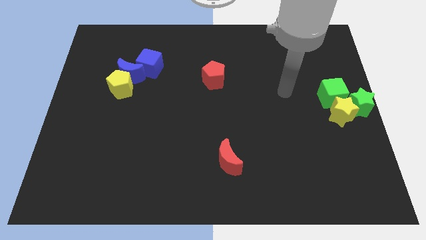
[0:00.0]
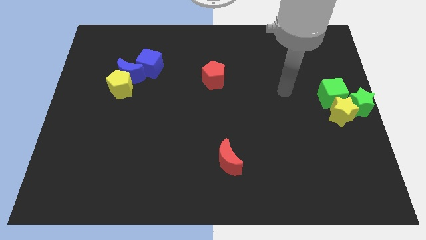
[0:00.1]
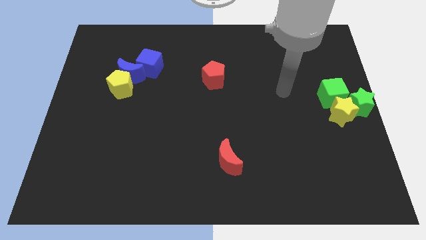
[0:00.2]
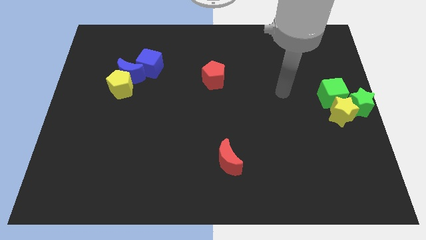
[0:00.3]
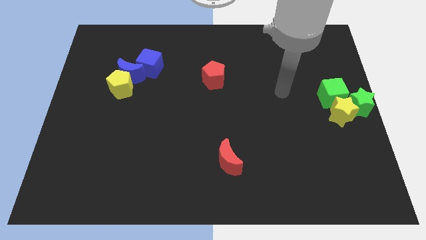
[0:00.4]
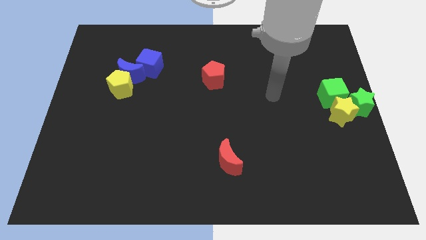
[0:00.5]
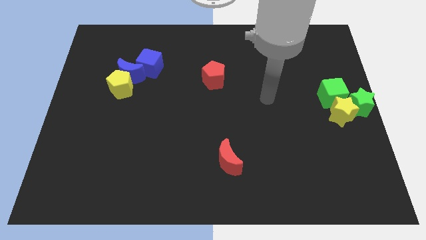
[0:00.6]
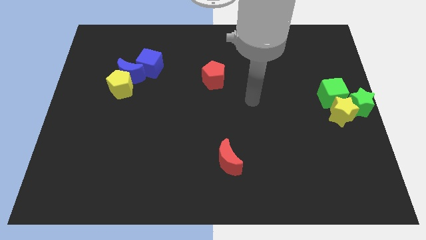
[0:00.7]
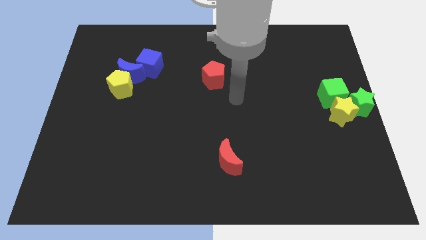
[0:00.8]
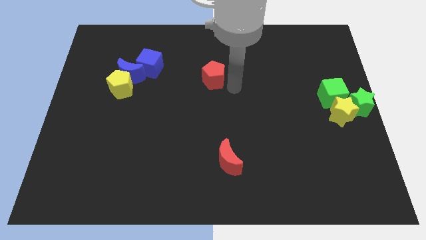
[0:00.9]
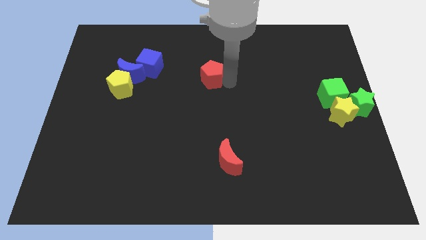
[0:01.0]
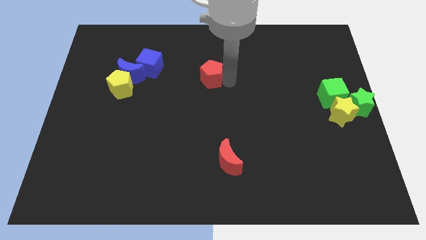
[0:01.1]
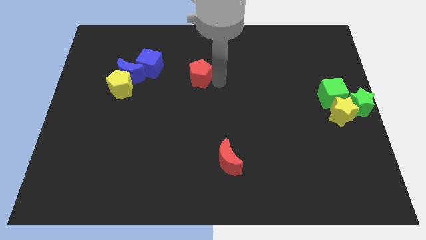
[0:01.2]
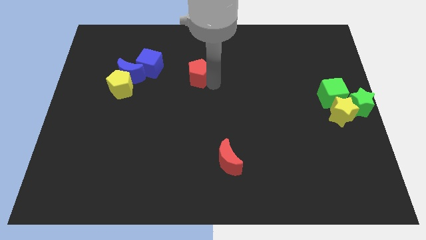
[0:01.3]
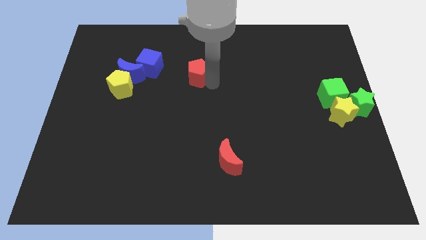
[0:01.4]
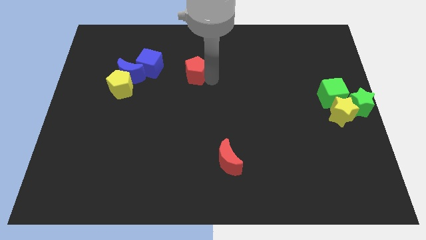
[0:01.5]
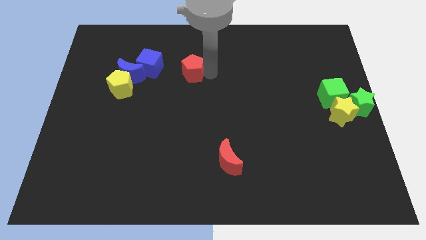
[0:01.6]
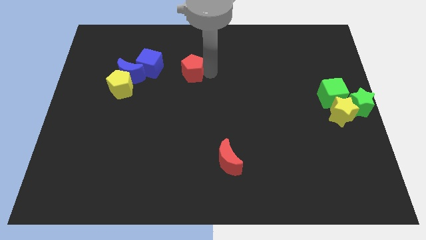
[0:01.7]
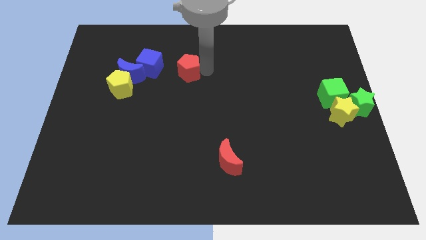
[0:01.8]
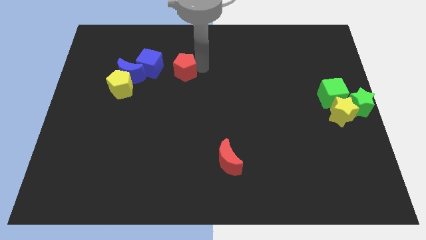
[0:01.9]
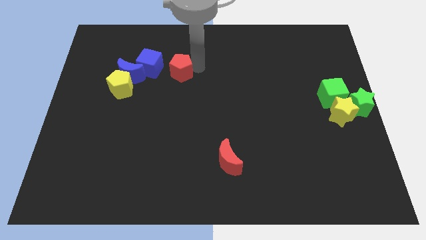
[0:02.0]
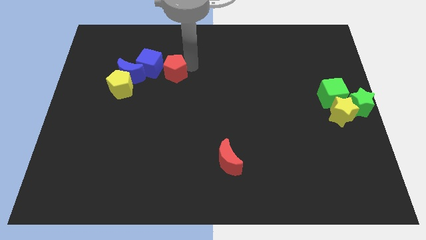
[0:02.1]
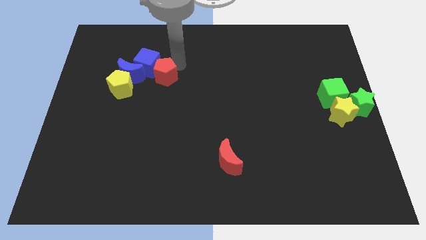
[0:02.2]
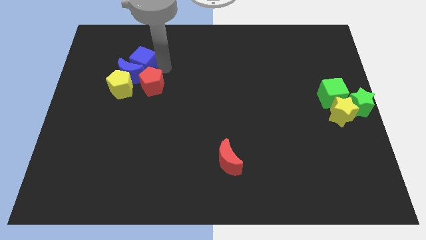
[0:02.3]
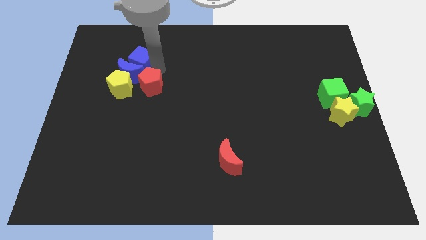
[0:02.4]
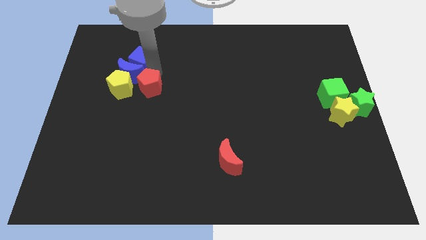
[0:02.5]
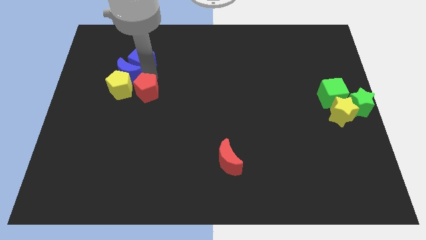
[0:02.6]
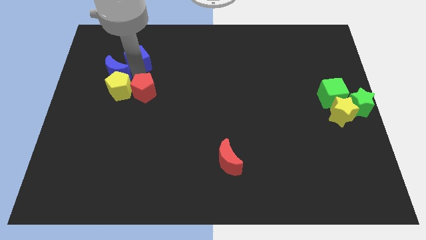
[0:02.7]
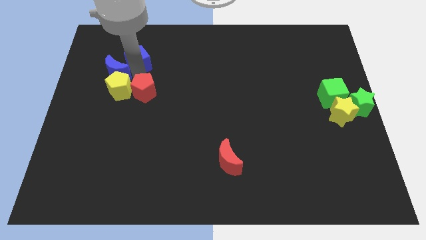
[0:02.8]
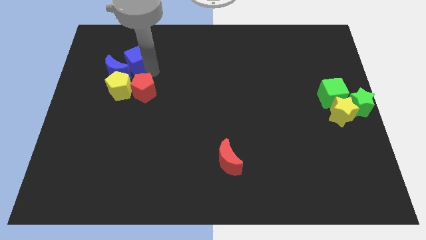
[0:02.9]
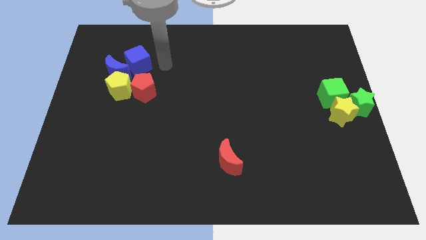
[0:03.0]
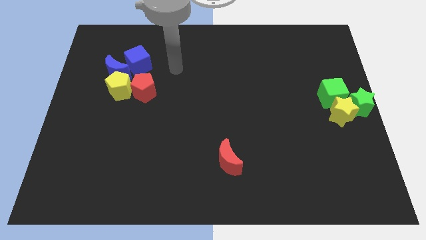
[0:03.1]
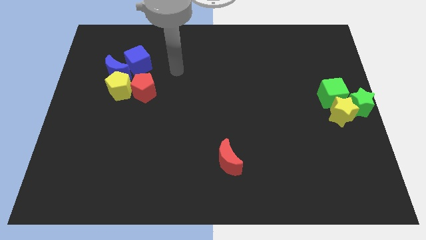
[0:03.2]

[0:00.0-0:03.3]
move red pentagon into the right of the yellow pentagon

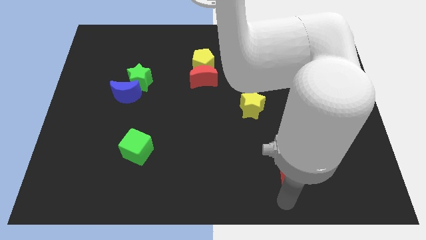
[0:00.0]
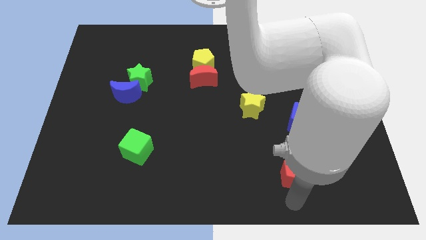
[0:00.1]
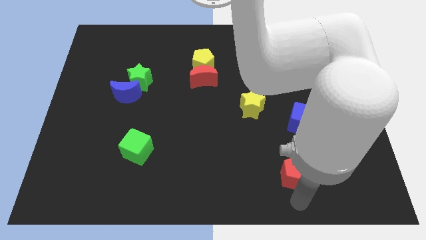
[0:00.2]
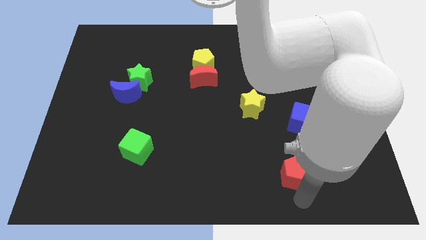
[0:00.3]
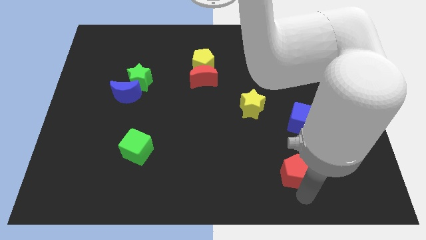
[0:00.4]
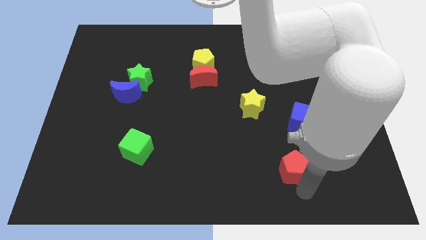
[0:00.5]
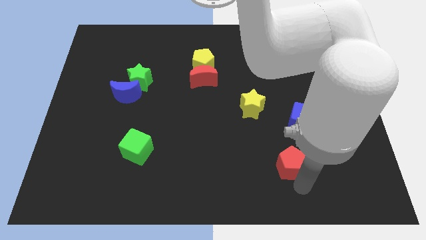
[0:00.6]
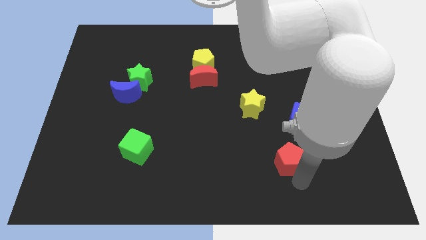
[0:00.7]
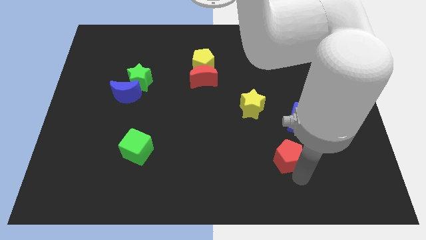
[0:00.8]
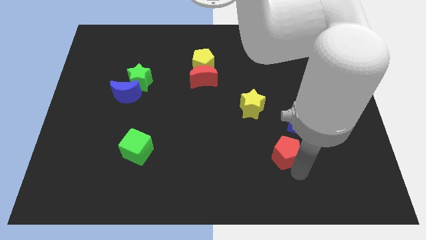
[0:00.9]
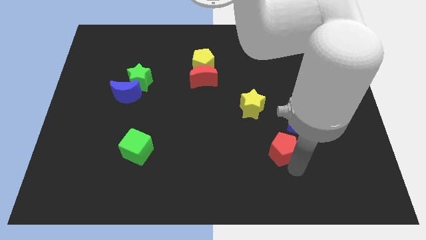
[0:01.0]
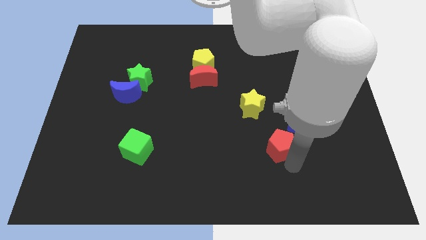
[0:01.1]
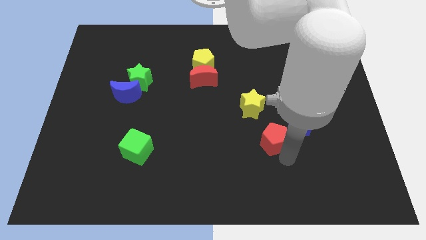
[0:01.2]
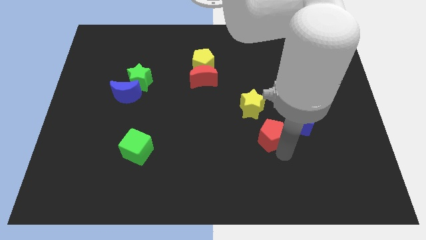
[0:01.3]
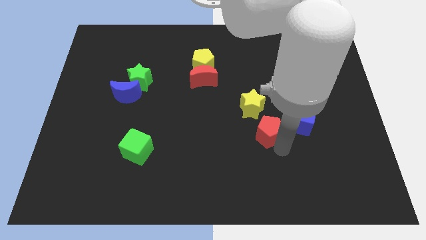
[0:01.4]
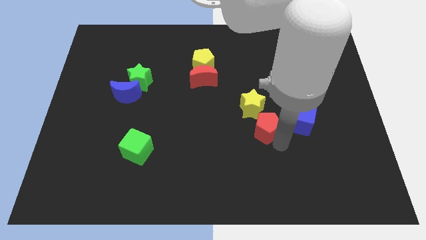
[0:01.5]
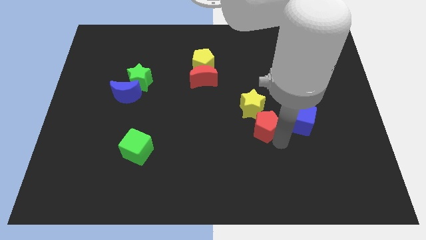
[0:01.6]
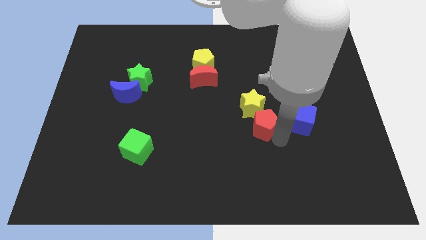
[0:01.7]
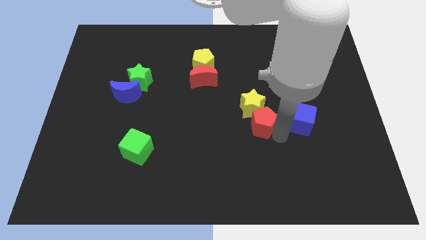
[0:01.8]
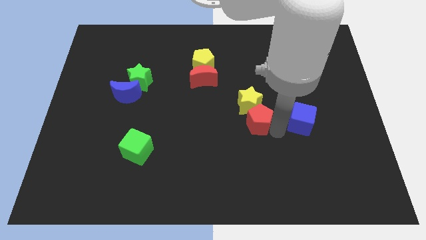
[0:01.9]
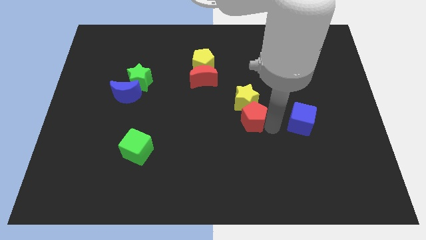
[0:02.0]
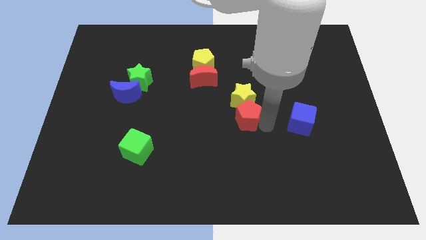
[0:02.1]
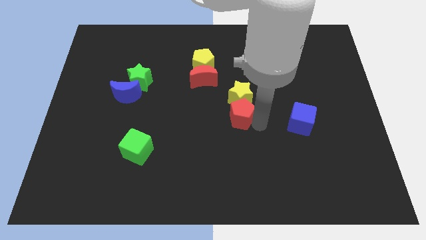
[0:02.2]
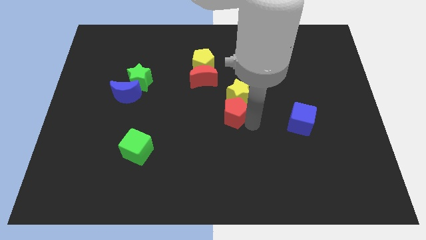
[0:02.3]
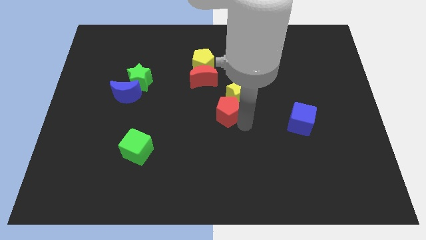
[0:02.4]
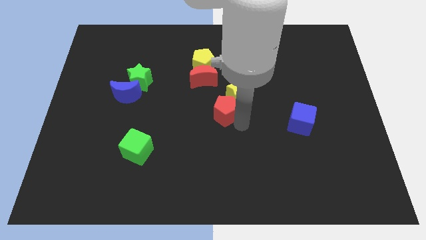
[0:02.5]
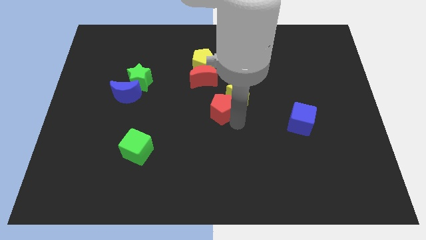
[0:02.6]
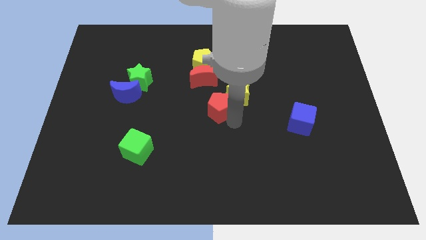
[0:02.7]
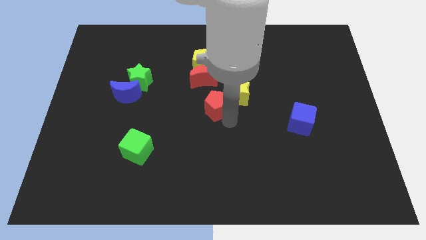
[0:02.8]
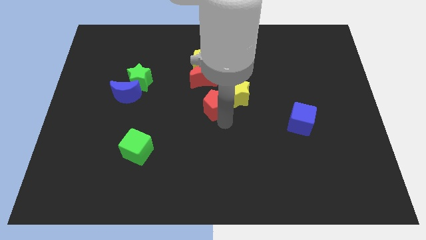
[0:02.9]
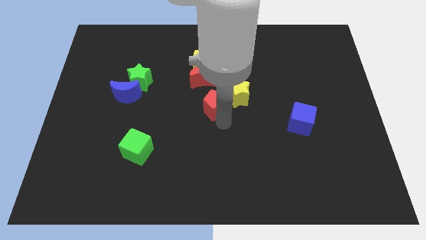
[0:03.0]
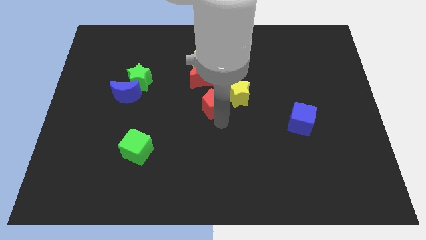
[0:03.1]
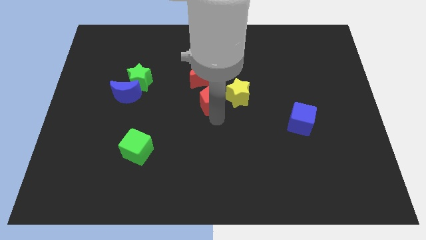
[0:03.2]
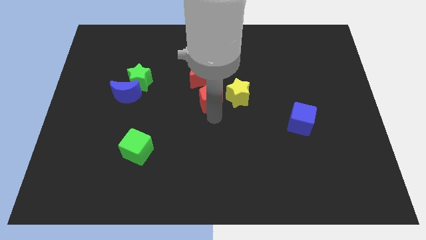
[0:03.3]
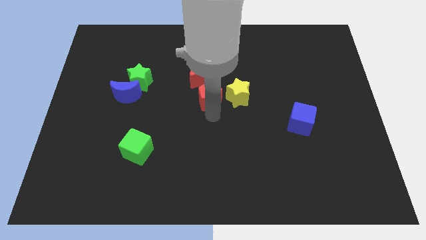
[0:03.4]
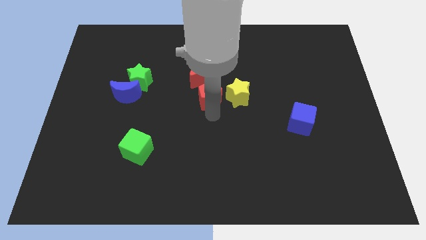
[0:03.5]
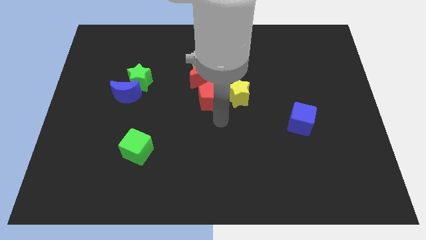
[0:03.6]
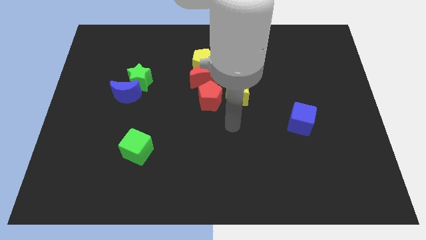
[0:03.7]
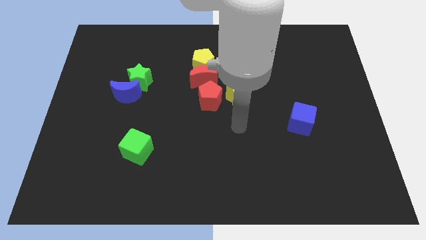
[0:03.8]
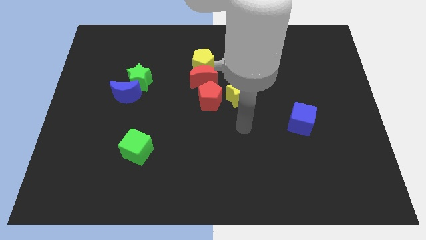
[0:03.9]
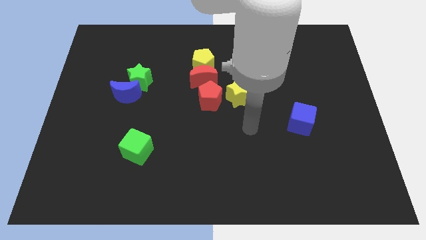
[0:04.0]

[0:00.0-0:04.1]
push red pentagon towards red moon

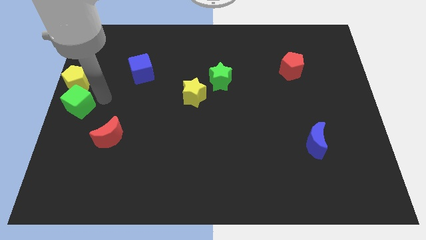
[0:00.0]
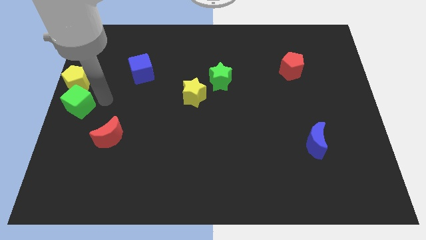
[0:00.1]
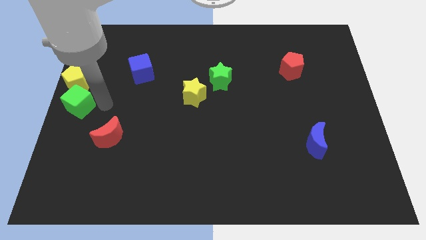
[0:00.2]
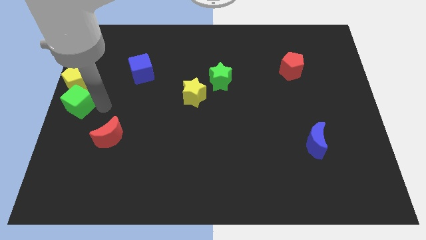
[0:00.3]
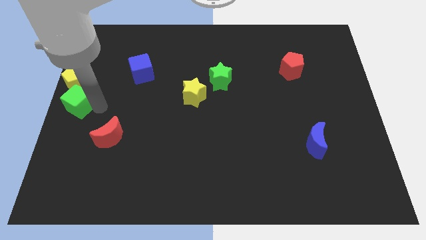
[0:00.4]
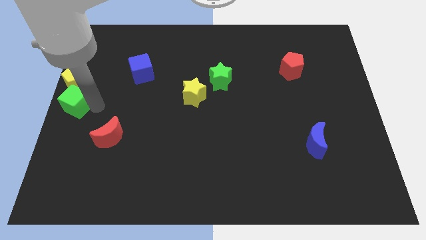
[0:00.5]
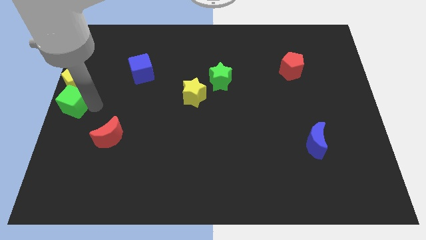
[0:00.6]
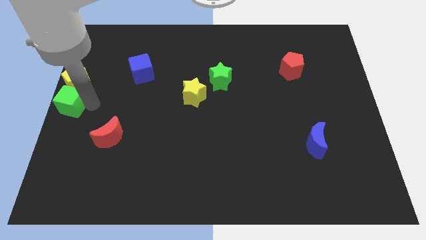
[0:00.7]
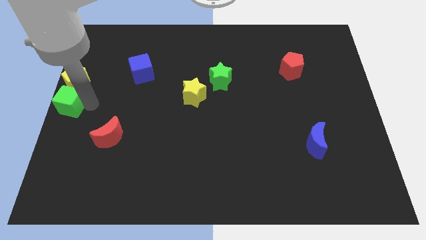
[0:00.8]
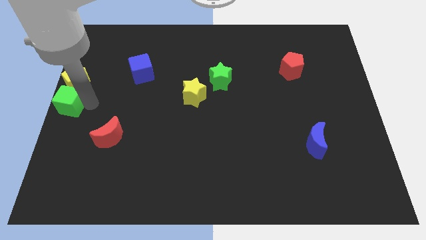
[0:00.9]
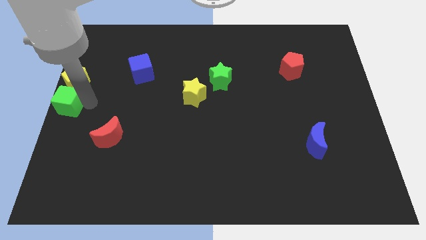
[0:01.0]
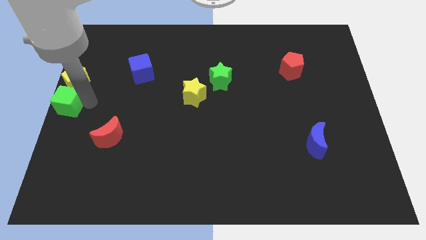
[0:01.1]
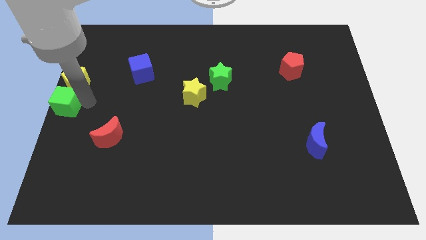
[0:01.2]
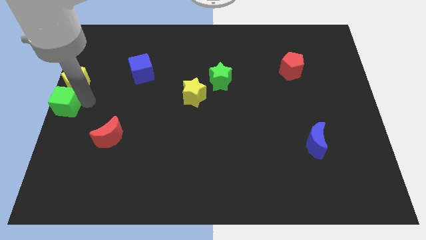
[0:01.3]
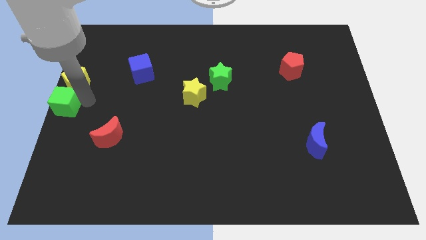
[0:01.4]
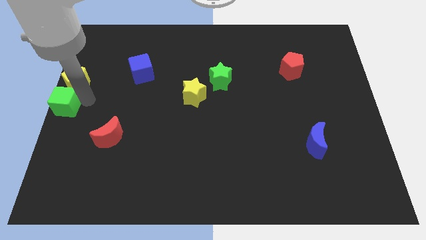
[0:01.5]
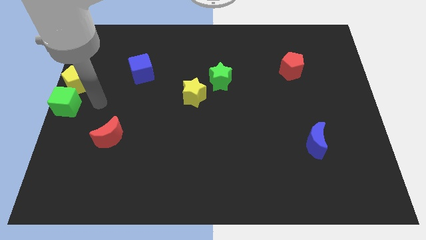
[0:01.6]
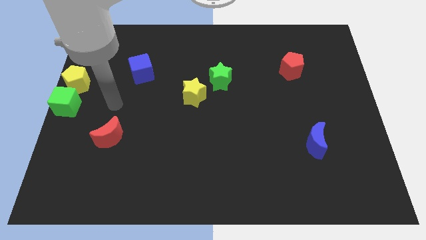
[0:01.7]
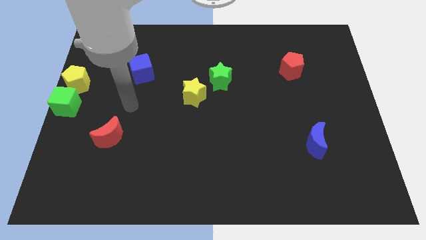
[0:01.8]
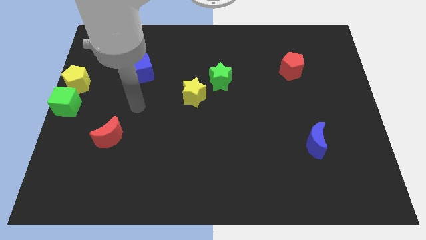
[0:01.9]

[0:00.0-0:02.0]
move green cube towards the left center of the board
